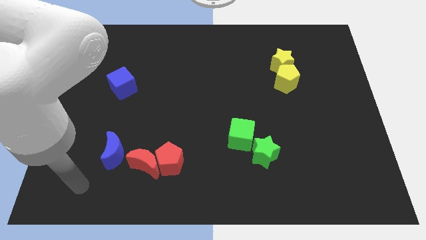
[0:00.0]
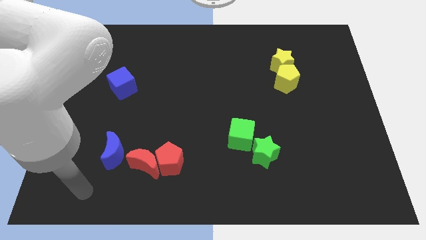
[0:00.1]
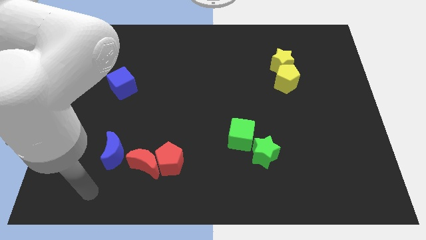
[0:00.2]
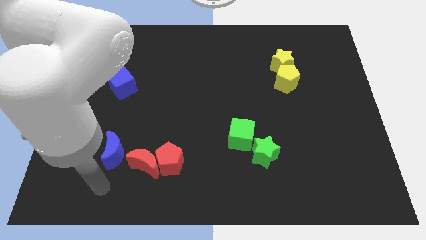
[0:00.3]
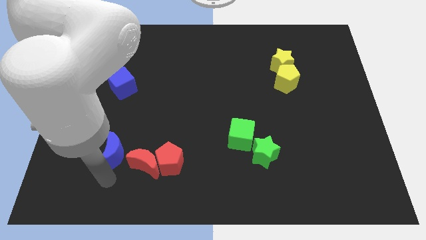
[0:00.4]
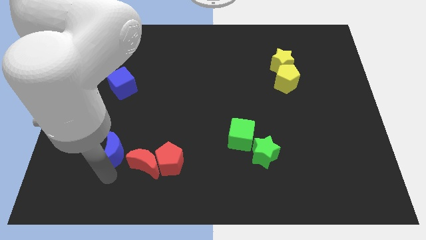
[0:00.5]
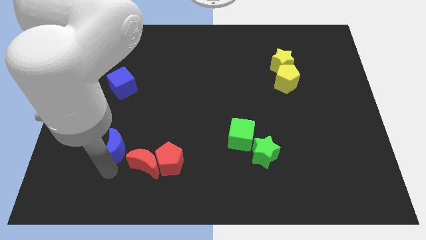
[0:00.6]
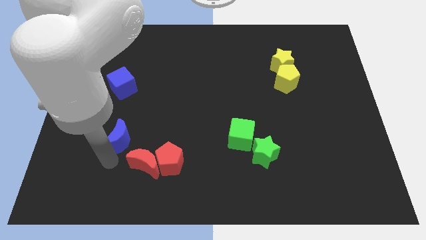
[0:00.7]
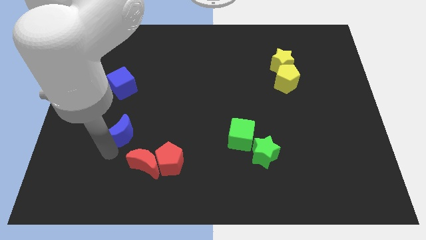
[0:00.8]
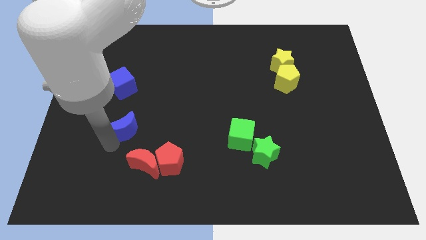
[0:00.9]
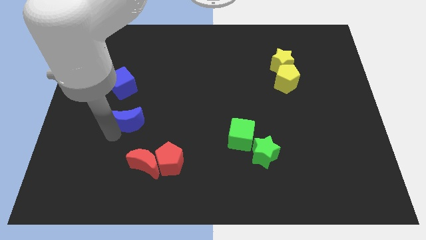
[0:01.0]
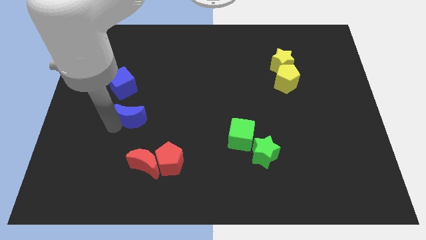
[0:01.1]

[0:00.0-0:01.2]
push blue moon towards blue cube

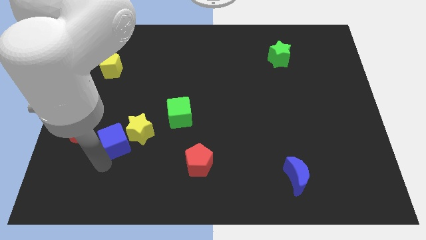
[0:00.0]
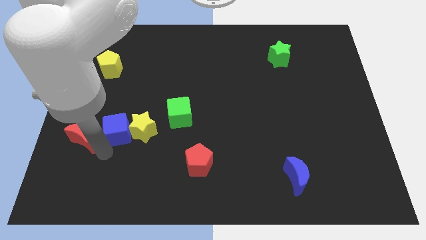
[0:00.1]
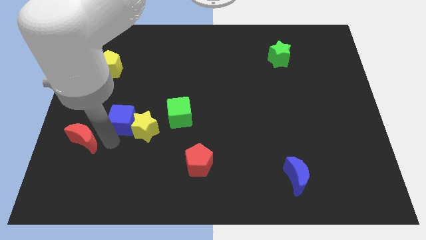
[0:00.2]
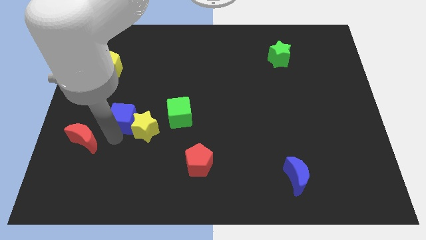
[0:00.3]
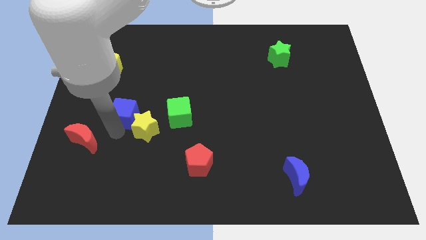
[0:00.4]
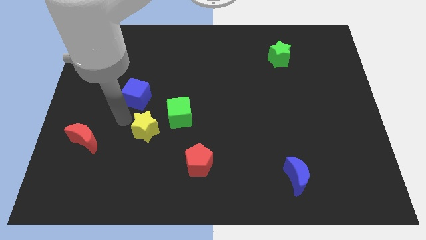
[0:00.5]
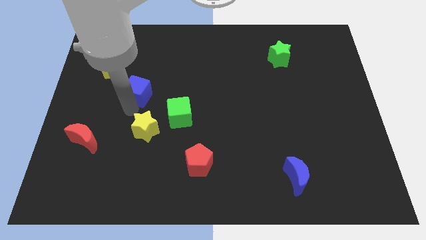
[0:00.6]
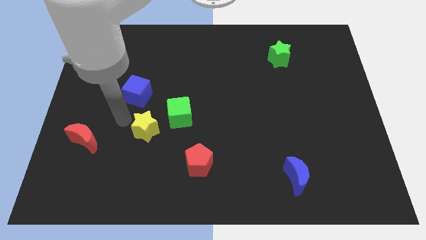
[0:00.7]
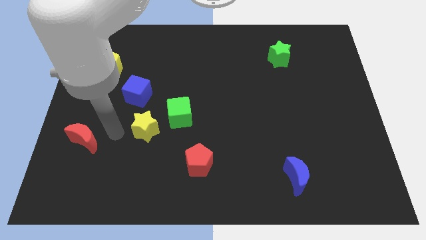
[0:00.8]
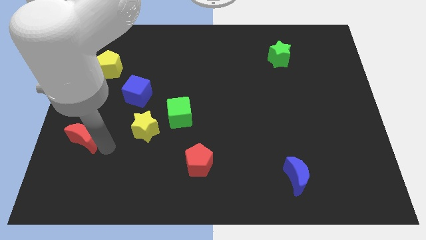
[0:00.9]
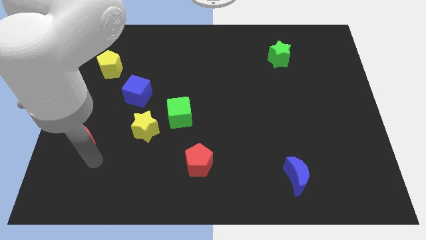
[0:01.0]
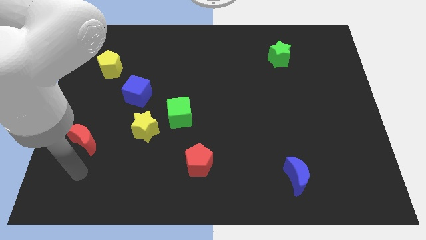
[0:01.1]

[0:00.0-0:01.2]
place blue cube above the yellow star

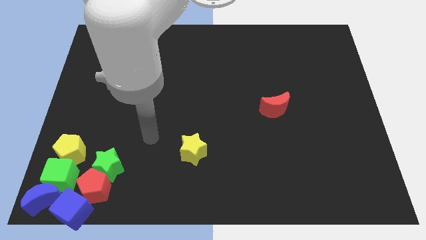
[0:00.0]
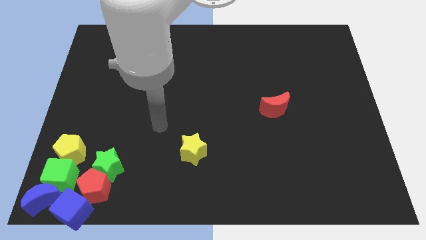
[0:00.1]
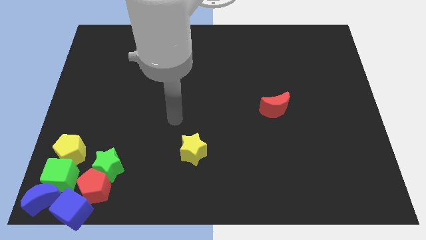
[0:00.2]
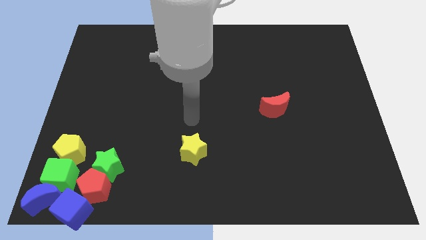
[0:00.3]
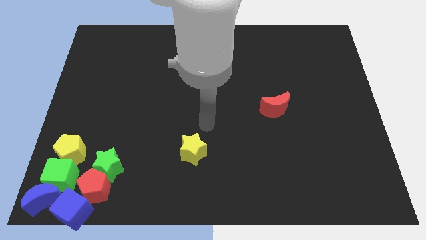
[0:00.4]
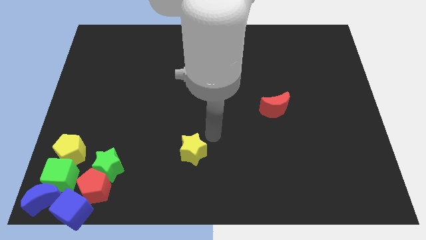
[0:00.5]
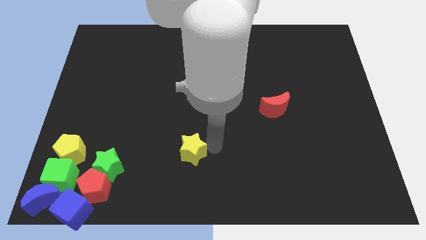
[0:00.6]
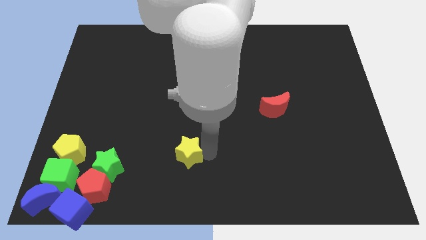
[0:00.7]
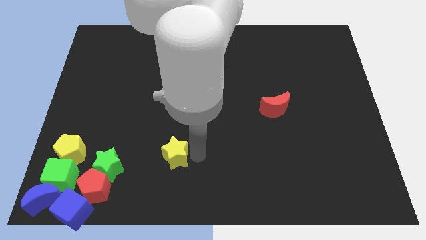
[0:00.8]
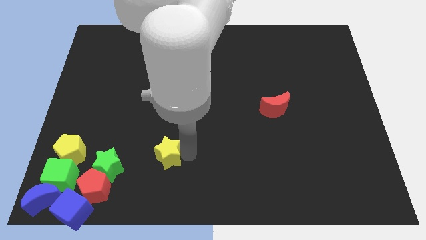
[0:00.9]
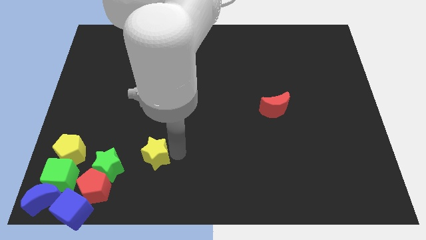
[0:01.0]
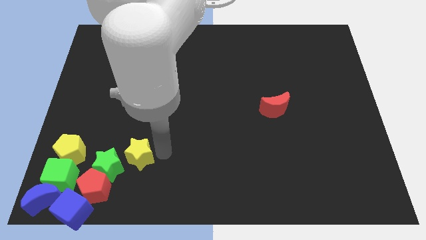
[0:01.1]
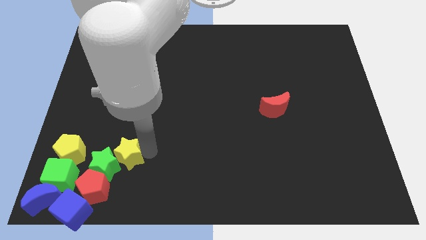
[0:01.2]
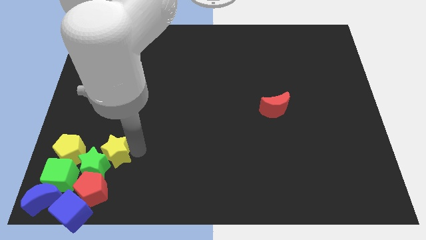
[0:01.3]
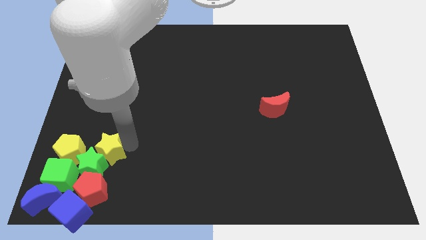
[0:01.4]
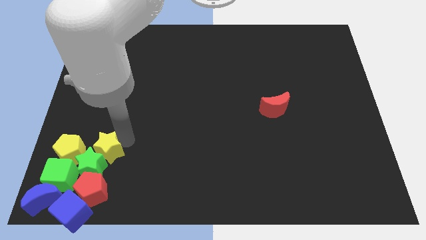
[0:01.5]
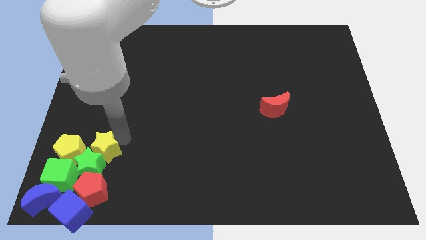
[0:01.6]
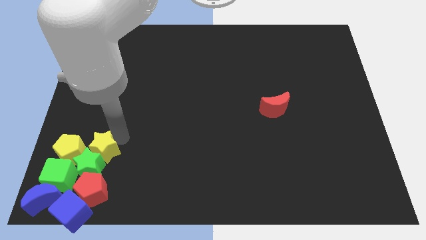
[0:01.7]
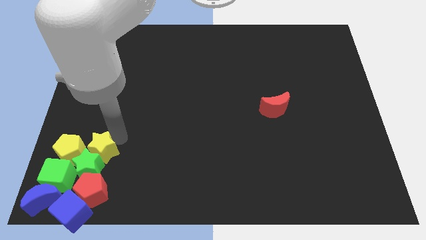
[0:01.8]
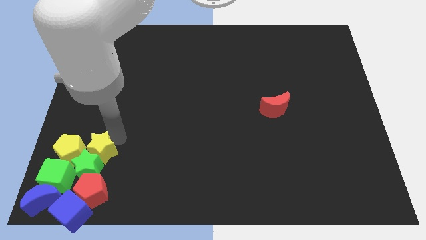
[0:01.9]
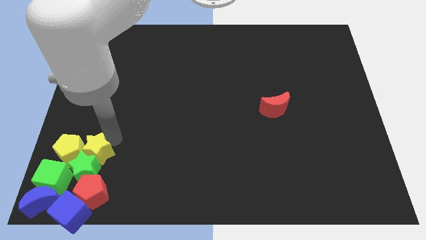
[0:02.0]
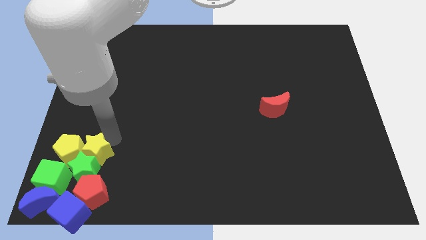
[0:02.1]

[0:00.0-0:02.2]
slide yellow star to the right of yellow pentagon

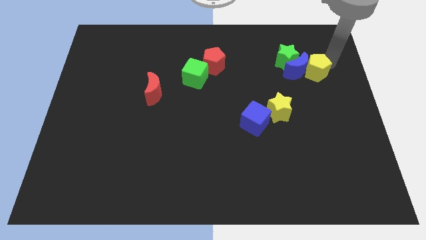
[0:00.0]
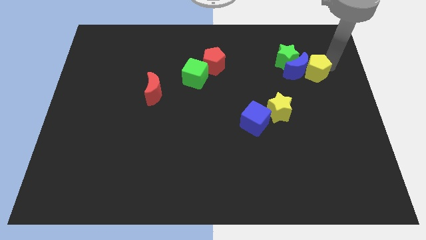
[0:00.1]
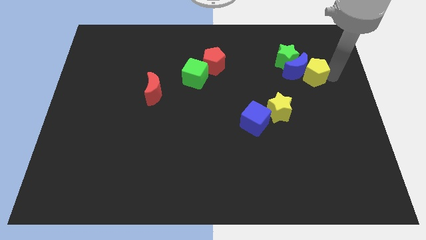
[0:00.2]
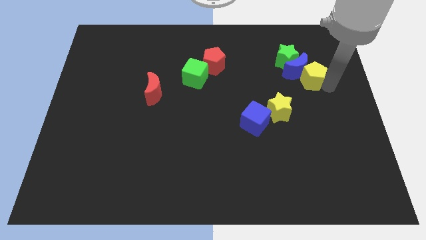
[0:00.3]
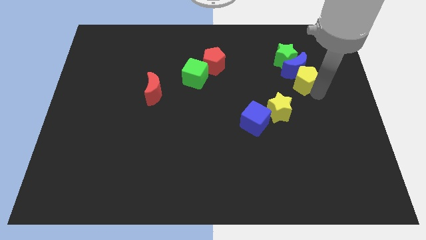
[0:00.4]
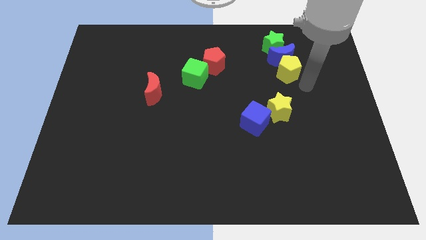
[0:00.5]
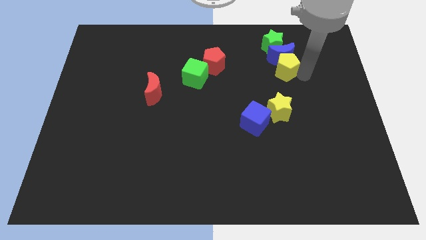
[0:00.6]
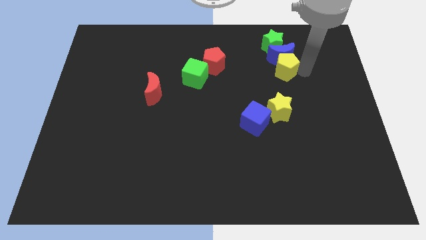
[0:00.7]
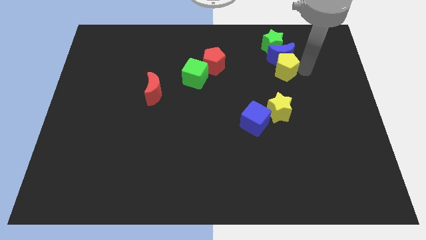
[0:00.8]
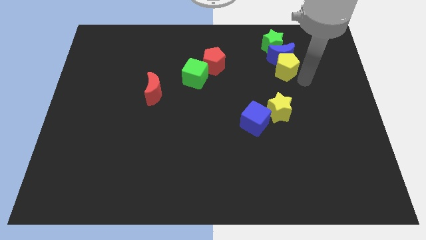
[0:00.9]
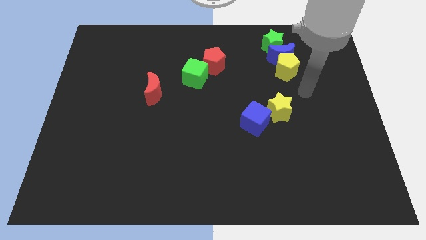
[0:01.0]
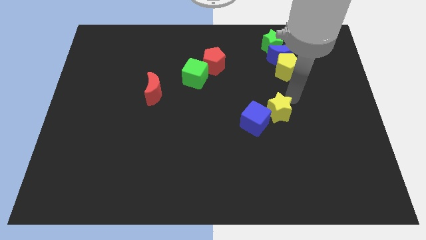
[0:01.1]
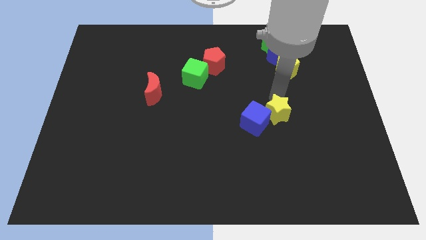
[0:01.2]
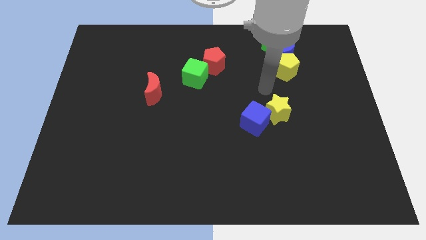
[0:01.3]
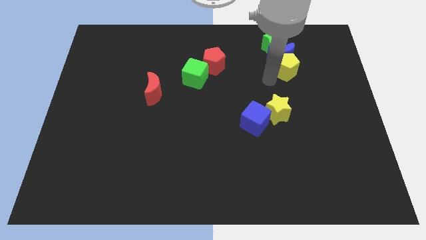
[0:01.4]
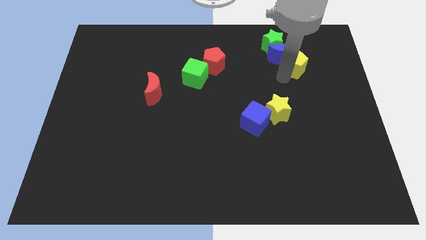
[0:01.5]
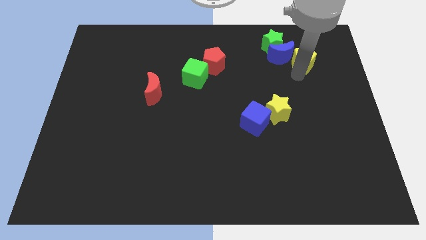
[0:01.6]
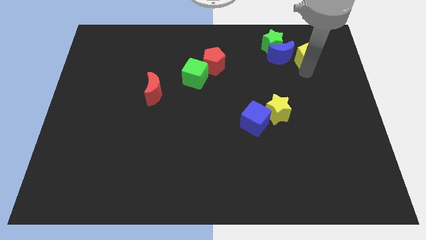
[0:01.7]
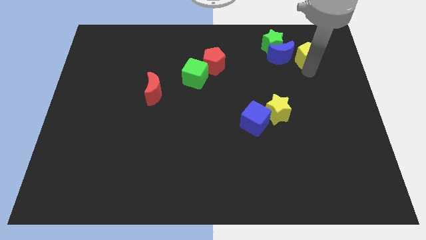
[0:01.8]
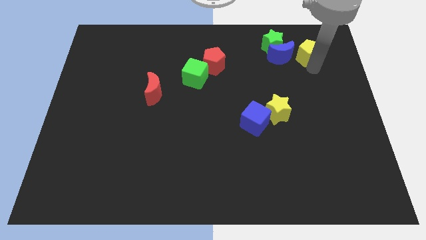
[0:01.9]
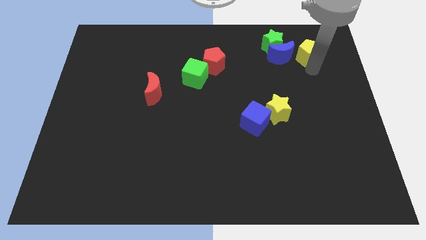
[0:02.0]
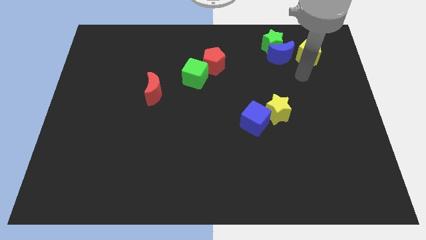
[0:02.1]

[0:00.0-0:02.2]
move the yellow pentagon right to the blue crescent

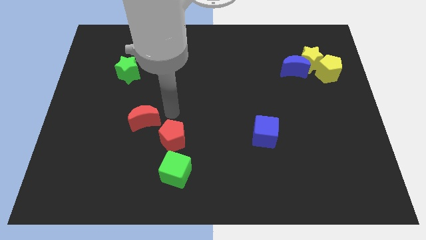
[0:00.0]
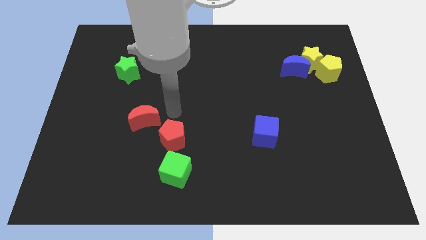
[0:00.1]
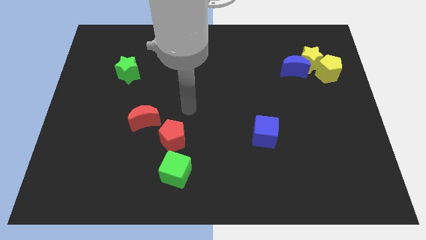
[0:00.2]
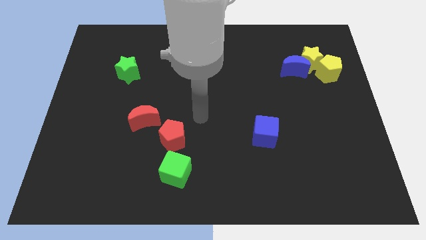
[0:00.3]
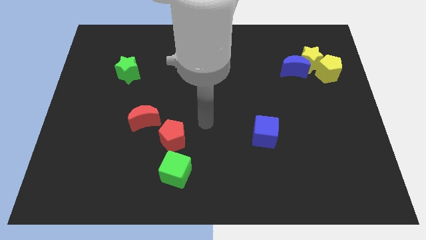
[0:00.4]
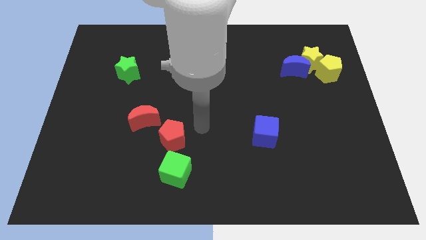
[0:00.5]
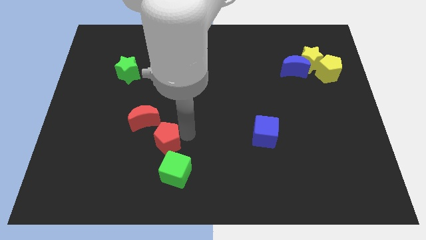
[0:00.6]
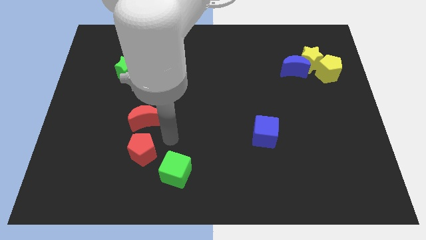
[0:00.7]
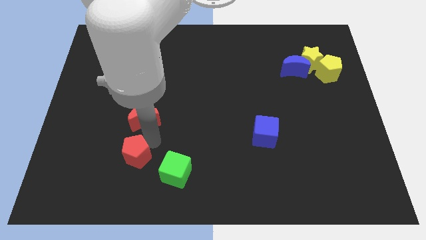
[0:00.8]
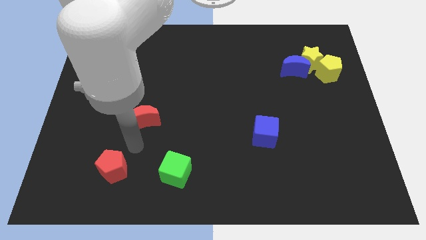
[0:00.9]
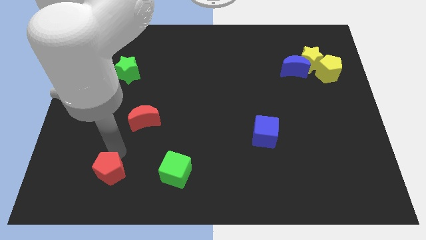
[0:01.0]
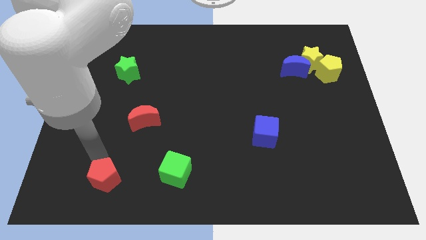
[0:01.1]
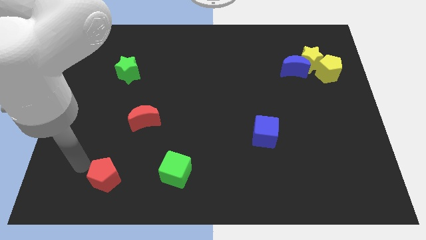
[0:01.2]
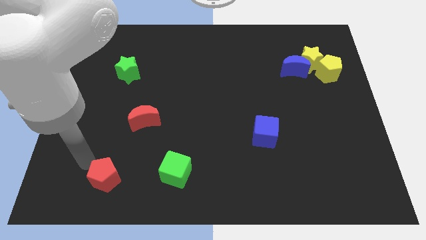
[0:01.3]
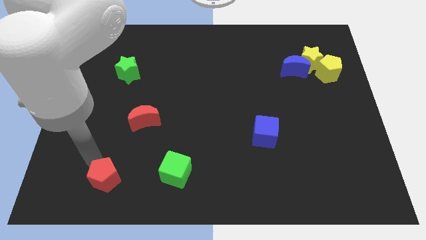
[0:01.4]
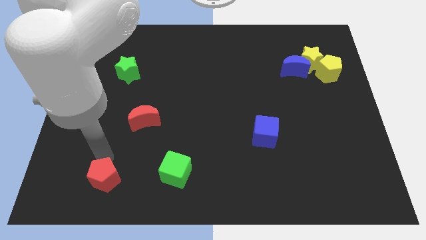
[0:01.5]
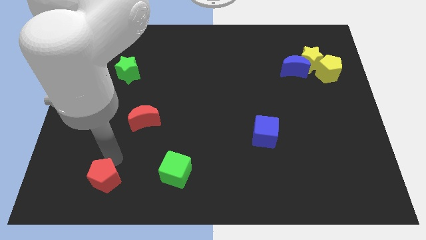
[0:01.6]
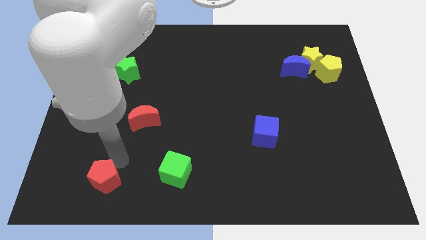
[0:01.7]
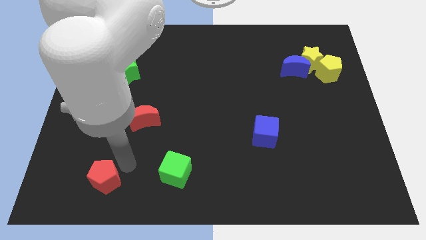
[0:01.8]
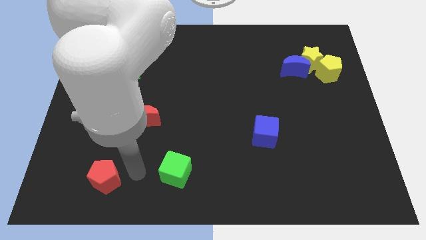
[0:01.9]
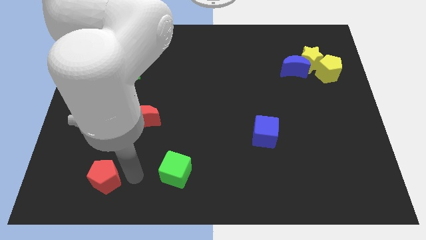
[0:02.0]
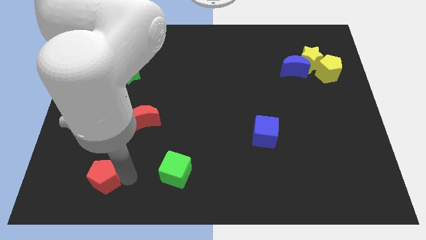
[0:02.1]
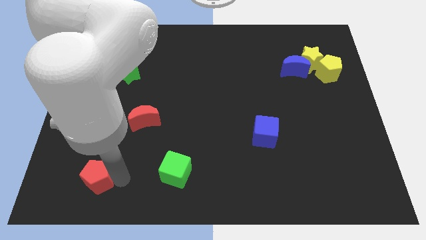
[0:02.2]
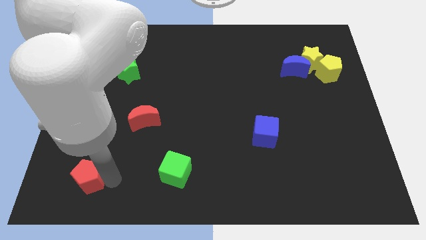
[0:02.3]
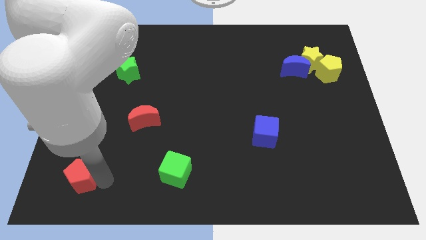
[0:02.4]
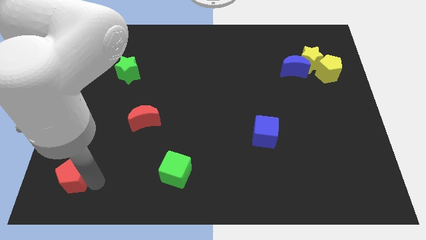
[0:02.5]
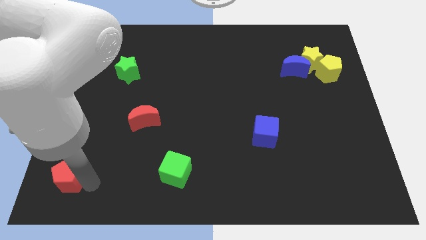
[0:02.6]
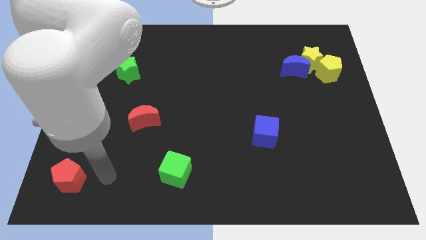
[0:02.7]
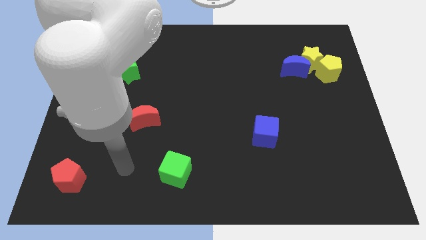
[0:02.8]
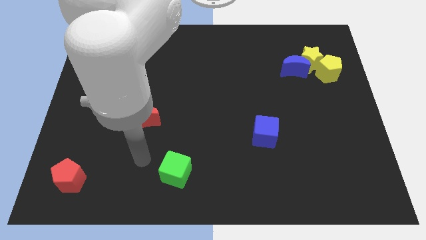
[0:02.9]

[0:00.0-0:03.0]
place the red pentagon at the bottom left of the board
